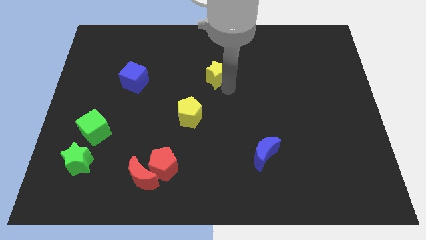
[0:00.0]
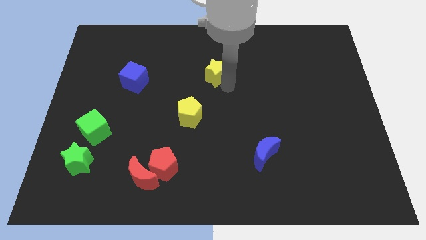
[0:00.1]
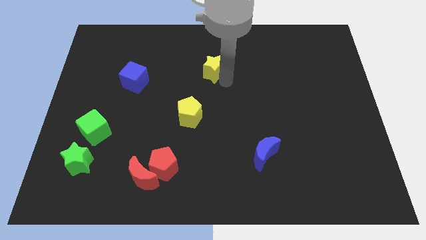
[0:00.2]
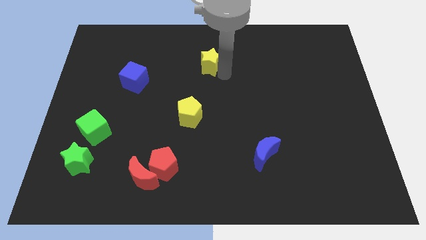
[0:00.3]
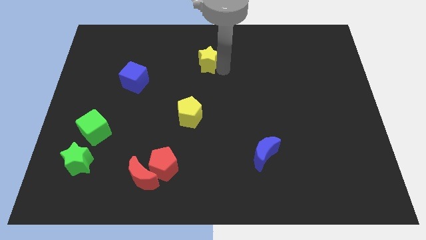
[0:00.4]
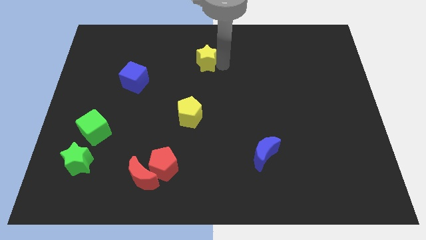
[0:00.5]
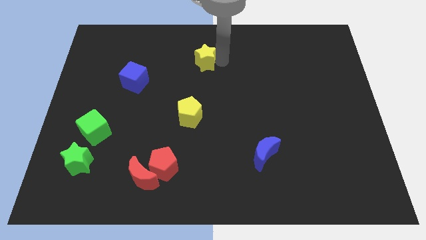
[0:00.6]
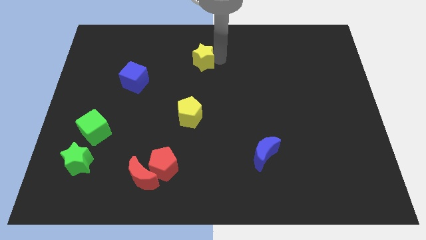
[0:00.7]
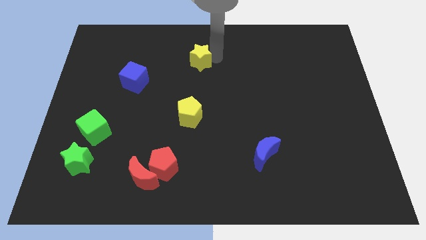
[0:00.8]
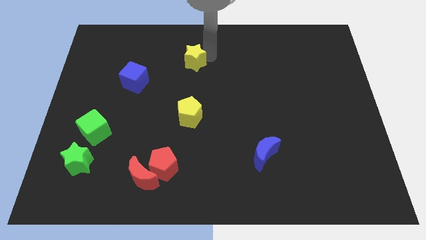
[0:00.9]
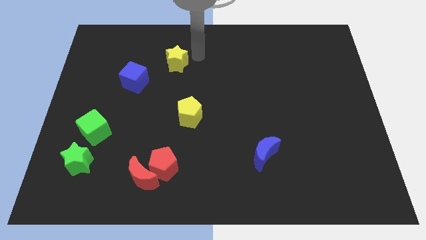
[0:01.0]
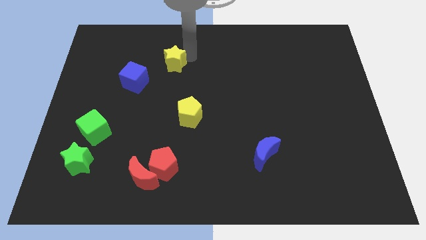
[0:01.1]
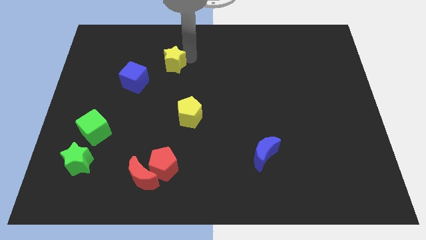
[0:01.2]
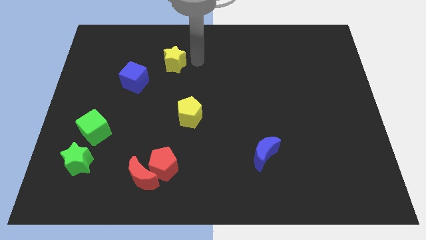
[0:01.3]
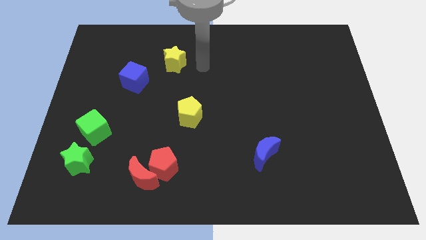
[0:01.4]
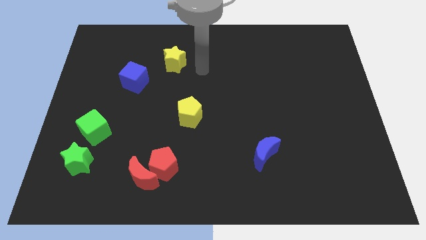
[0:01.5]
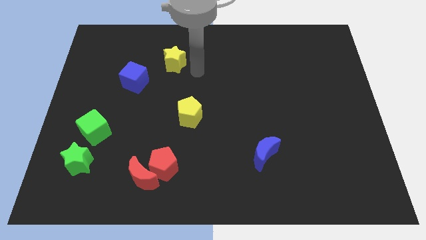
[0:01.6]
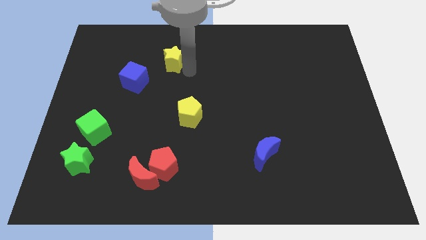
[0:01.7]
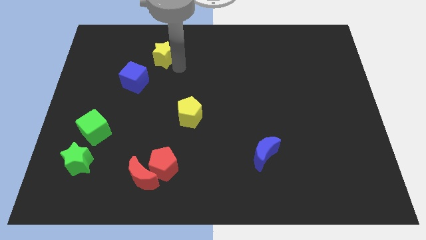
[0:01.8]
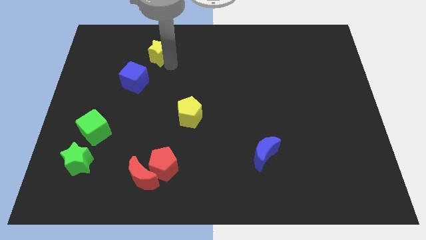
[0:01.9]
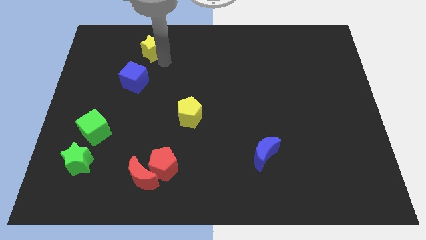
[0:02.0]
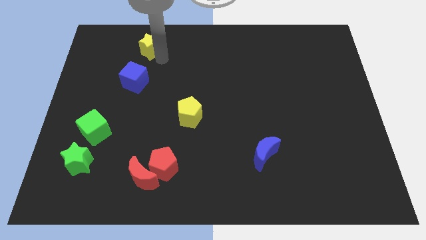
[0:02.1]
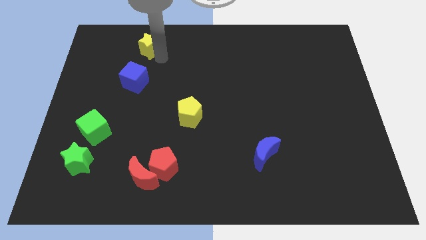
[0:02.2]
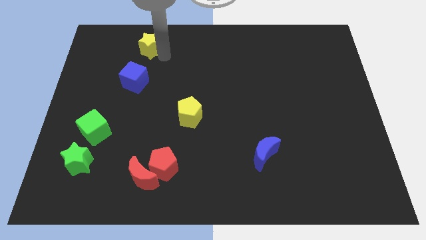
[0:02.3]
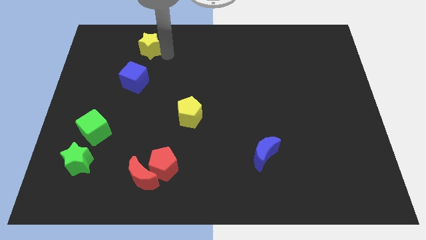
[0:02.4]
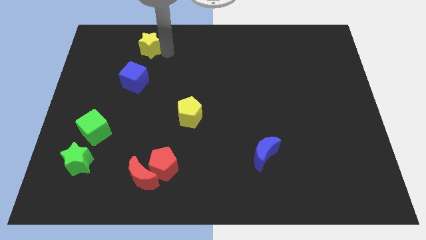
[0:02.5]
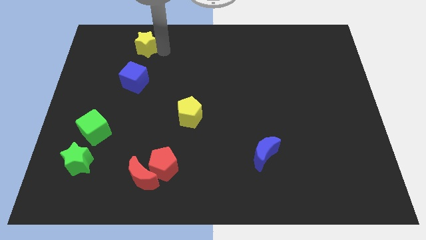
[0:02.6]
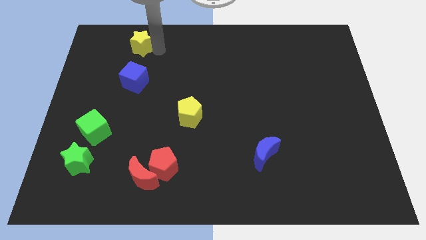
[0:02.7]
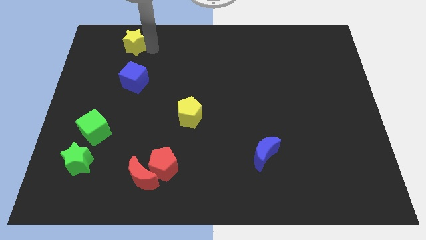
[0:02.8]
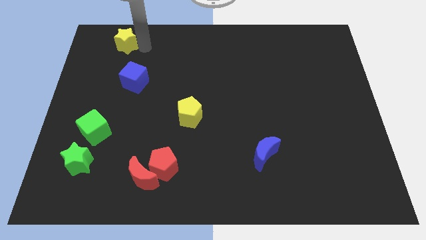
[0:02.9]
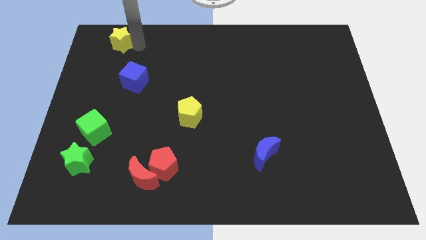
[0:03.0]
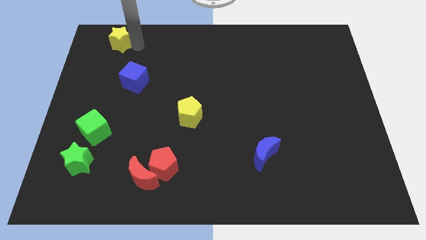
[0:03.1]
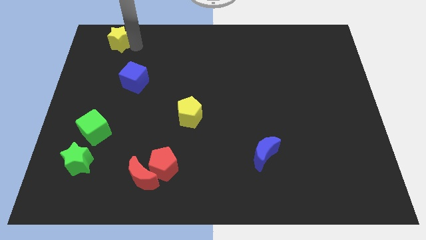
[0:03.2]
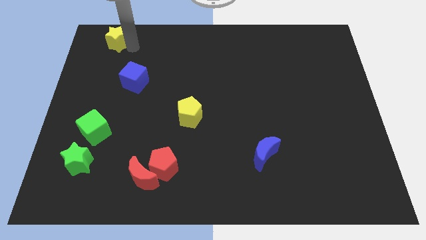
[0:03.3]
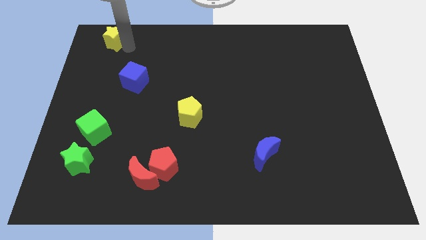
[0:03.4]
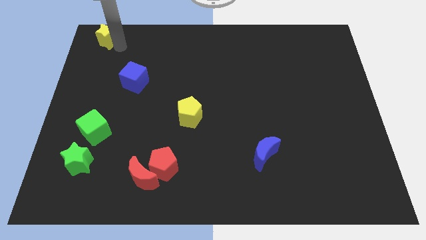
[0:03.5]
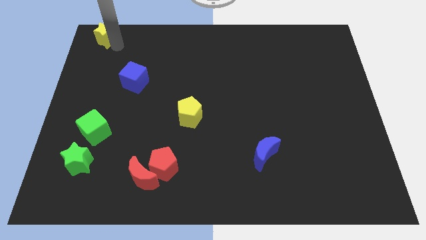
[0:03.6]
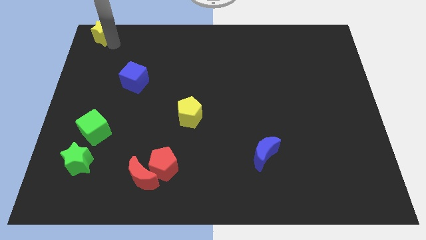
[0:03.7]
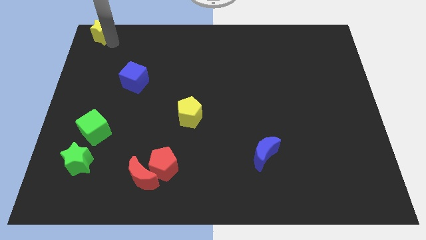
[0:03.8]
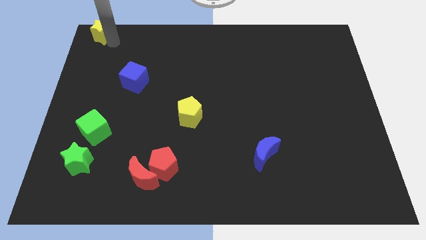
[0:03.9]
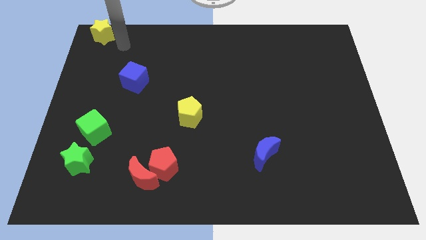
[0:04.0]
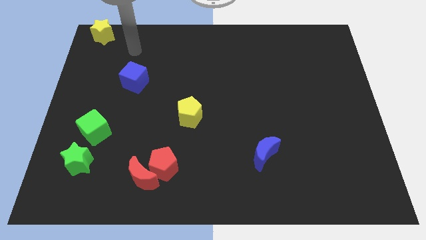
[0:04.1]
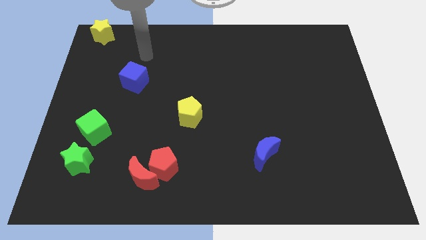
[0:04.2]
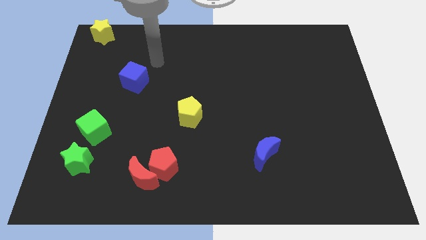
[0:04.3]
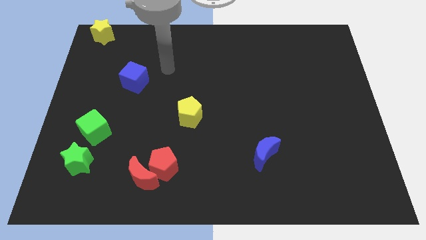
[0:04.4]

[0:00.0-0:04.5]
push yellow star to the top left side

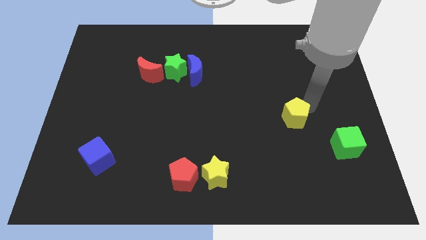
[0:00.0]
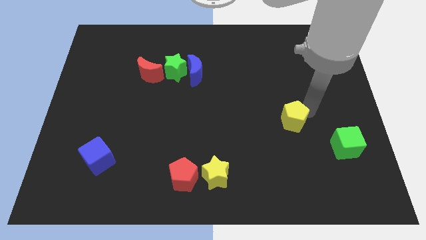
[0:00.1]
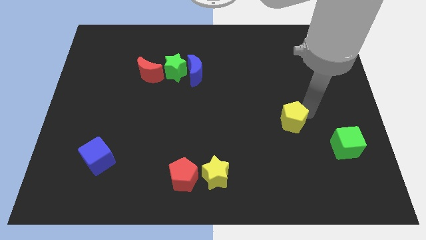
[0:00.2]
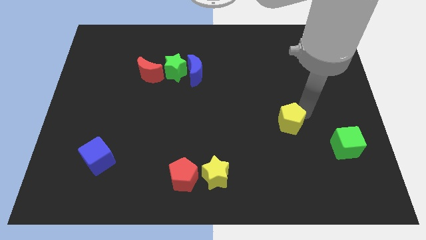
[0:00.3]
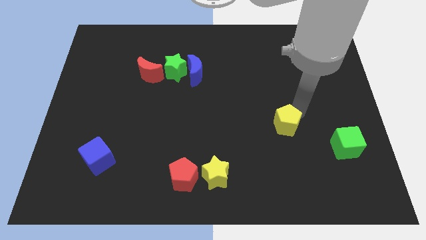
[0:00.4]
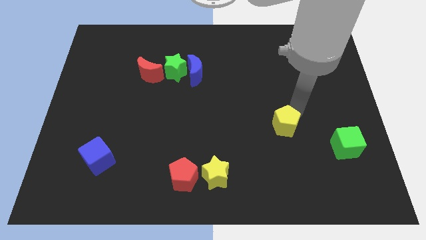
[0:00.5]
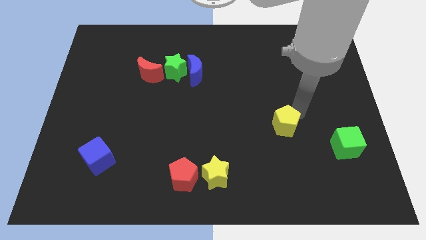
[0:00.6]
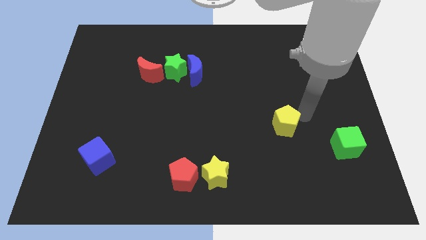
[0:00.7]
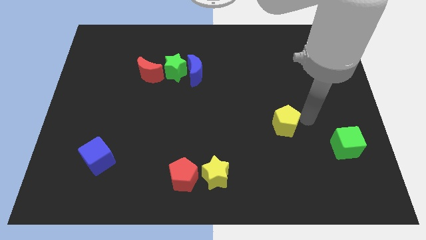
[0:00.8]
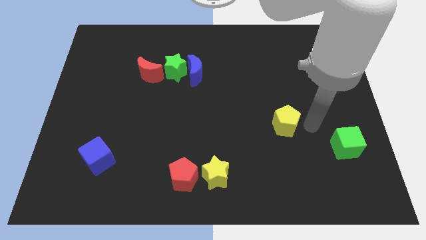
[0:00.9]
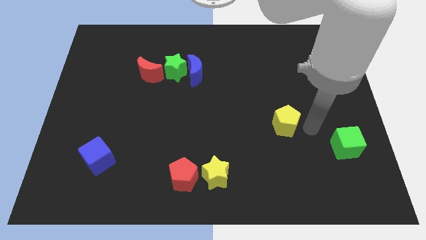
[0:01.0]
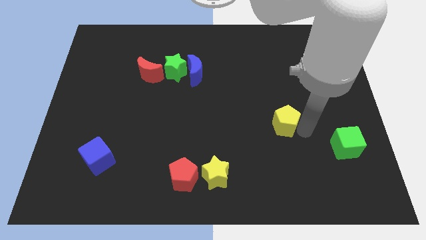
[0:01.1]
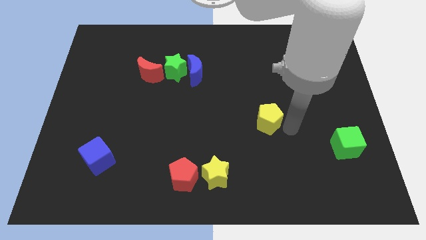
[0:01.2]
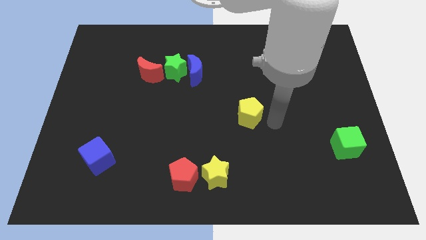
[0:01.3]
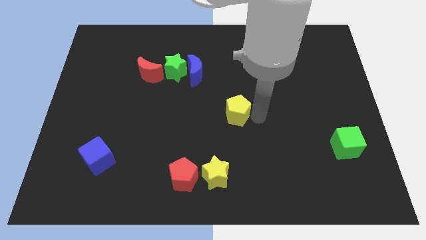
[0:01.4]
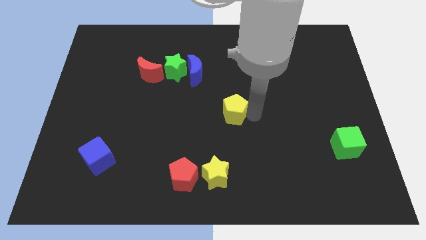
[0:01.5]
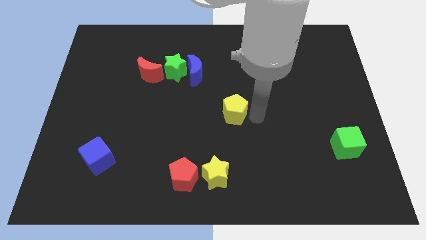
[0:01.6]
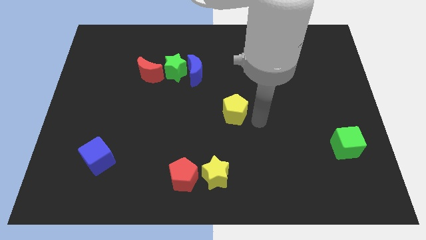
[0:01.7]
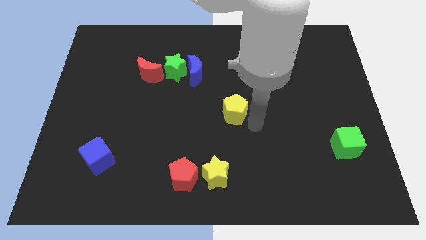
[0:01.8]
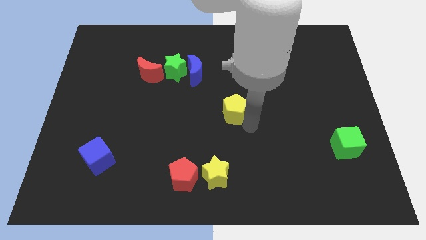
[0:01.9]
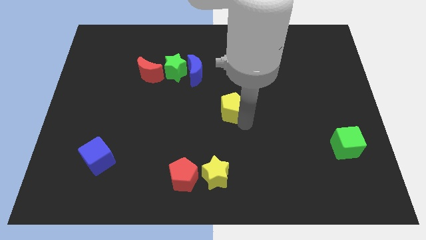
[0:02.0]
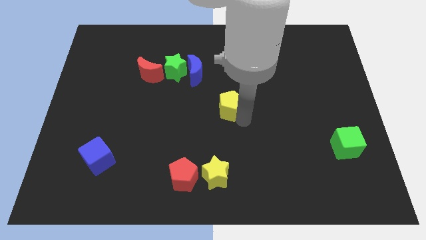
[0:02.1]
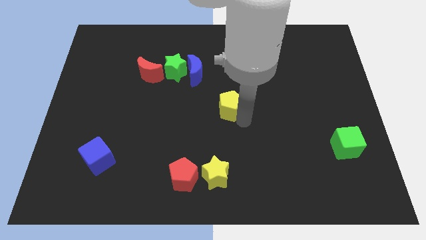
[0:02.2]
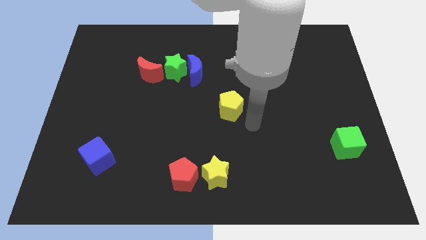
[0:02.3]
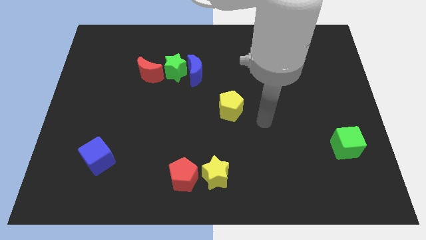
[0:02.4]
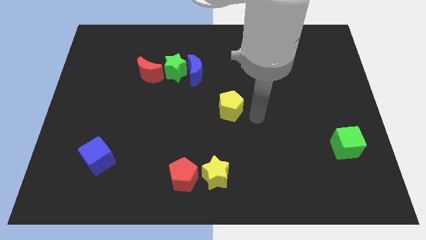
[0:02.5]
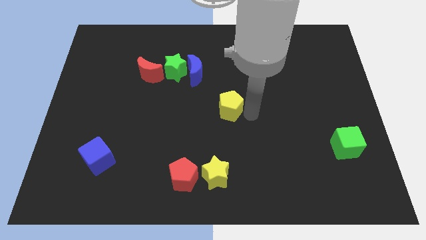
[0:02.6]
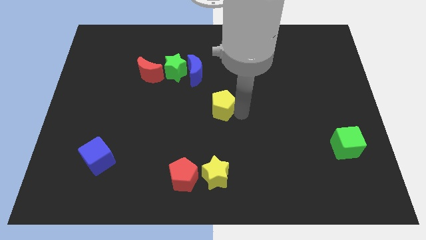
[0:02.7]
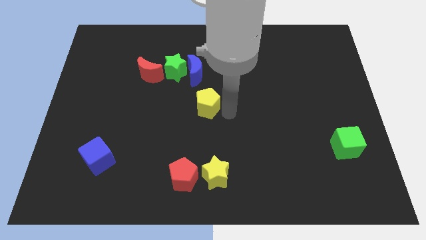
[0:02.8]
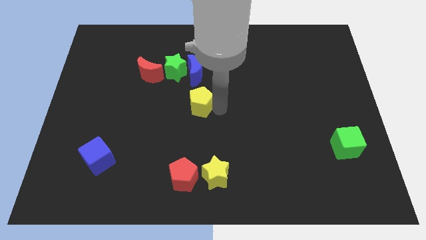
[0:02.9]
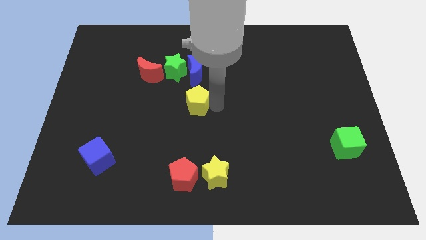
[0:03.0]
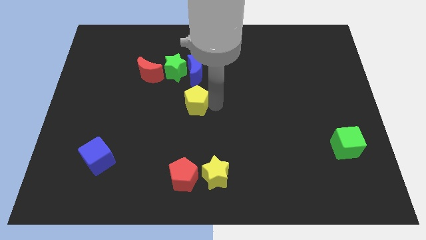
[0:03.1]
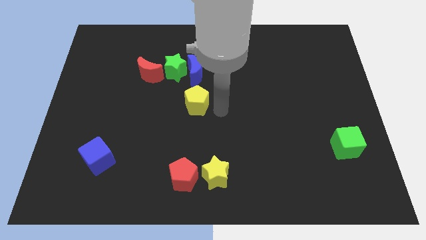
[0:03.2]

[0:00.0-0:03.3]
put the yellow pentagon underneath the blue crescent

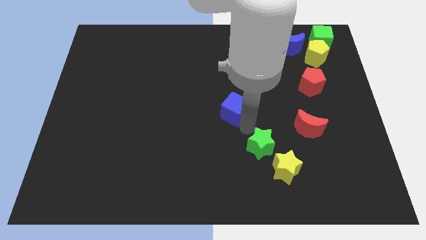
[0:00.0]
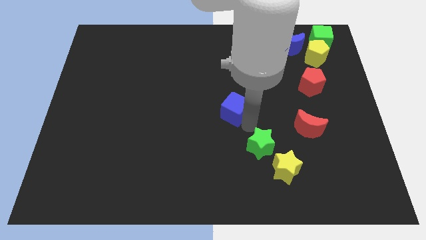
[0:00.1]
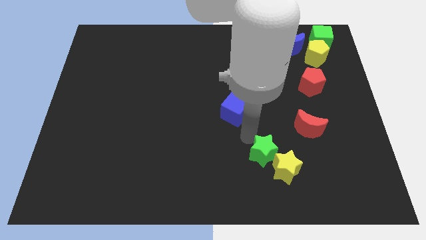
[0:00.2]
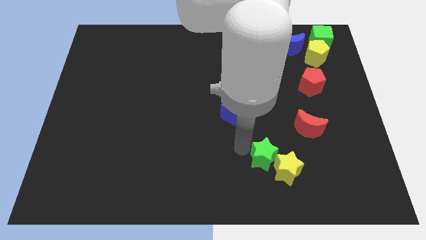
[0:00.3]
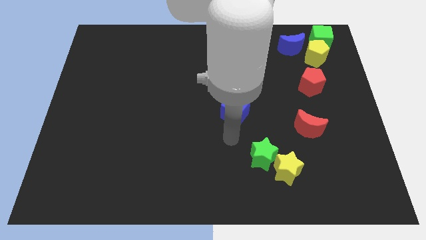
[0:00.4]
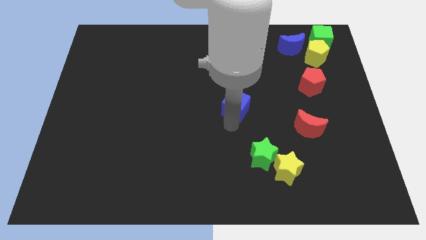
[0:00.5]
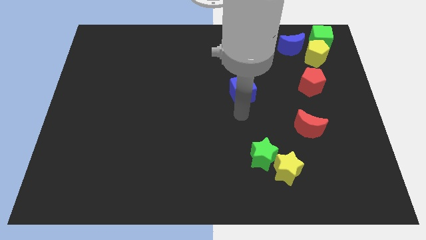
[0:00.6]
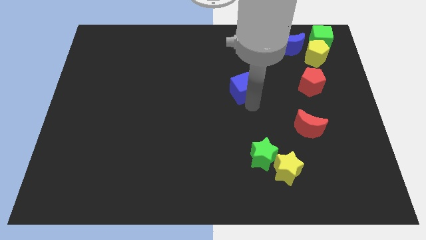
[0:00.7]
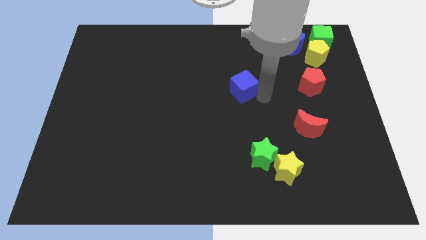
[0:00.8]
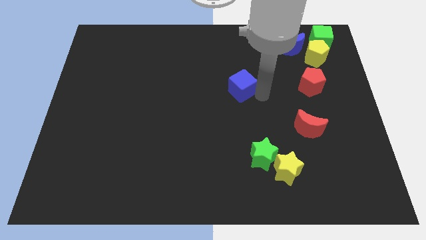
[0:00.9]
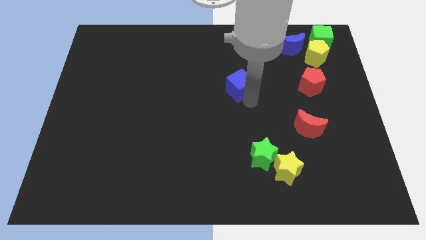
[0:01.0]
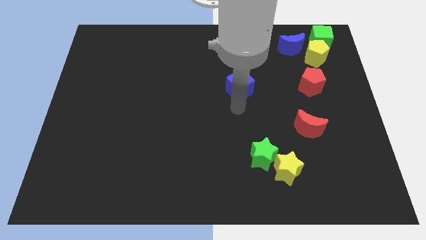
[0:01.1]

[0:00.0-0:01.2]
move the blue cube to the center
